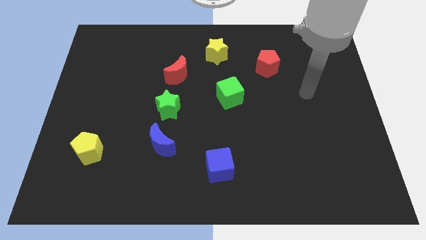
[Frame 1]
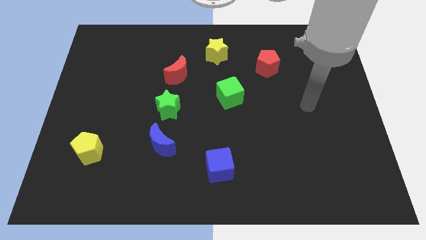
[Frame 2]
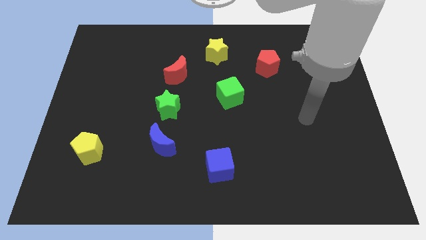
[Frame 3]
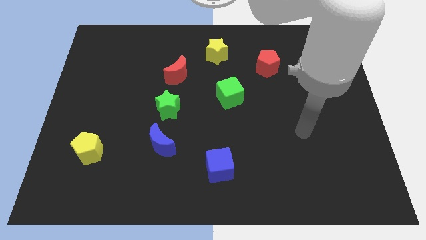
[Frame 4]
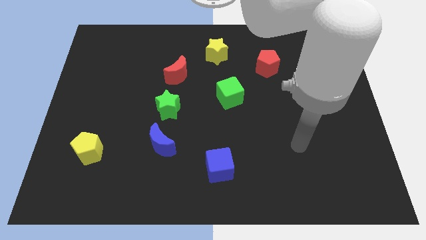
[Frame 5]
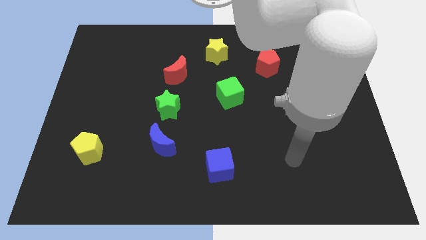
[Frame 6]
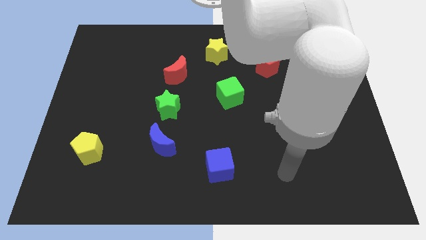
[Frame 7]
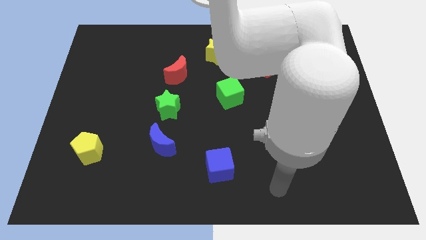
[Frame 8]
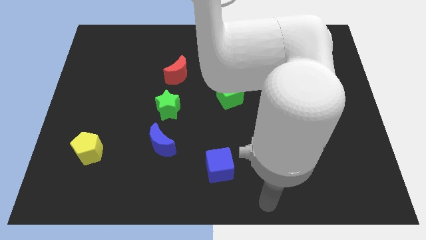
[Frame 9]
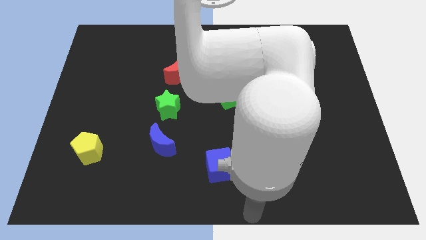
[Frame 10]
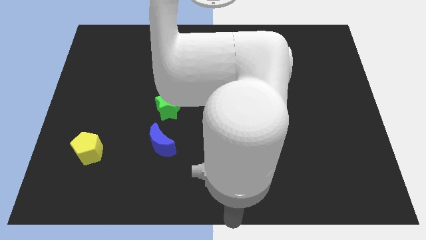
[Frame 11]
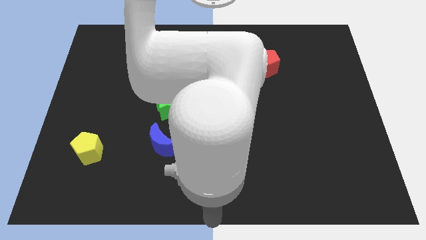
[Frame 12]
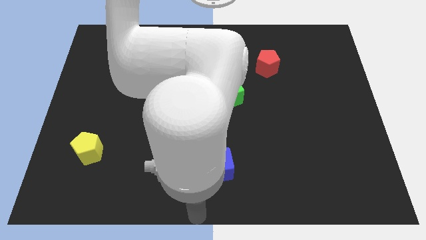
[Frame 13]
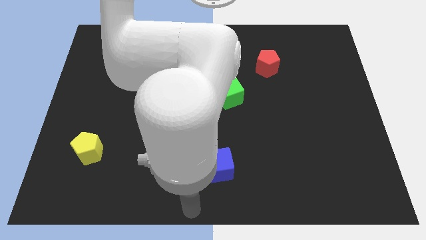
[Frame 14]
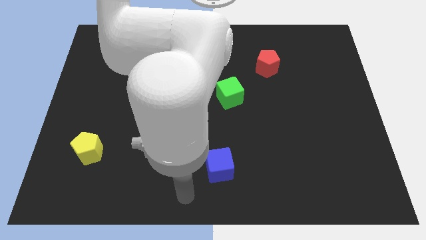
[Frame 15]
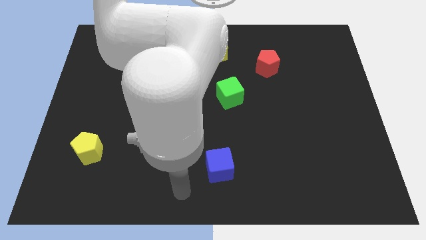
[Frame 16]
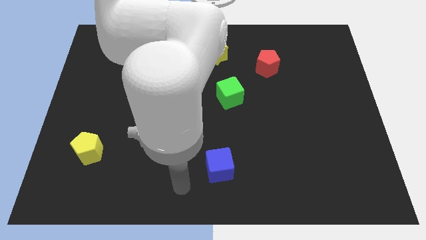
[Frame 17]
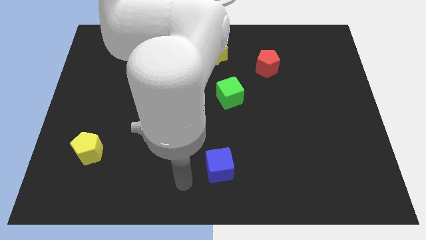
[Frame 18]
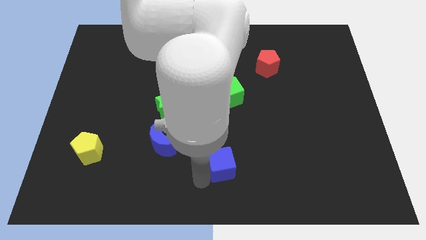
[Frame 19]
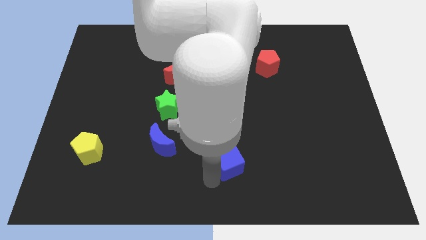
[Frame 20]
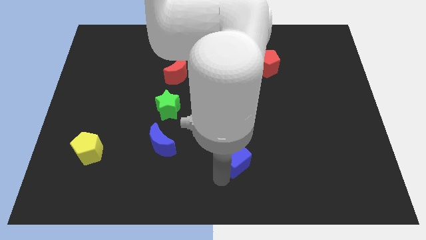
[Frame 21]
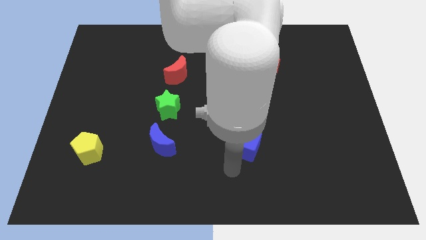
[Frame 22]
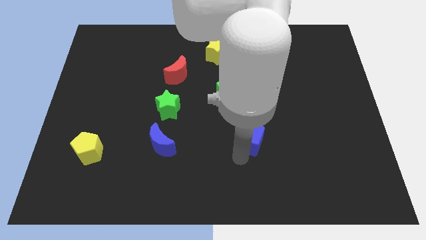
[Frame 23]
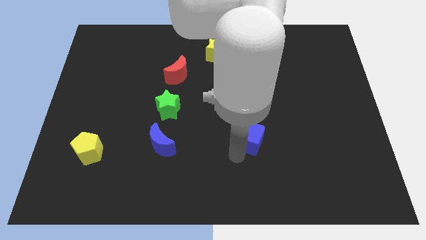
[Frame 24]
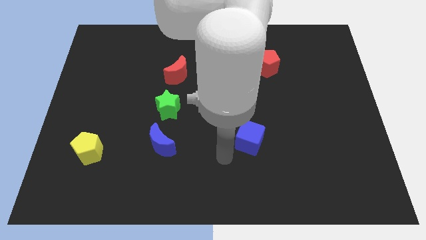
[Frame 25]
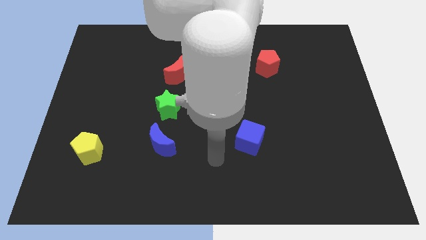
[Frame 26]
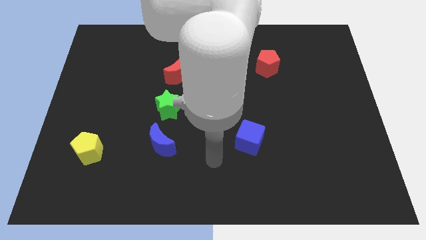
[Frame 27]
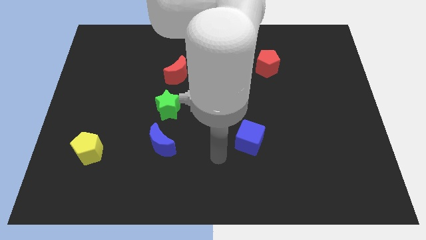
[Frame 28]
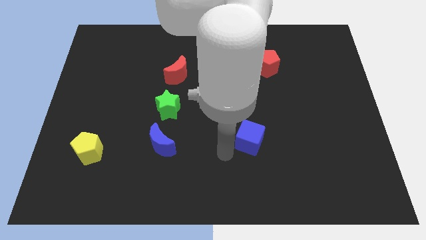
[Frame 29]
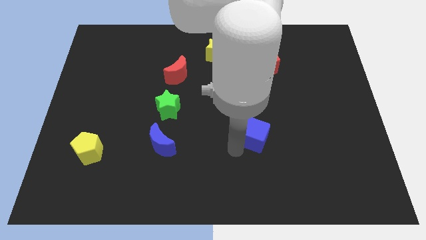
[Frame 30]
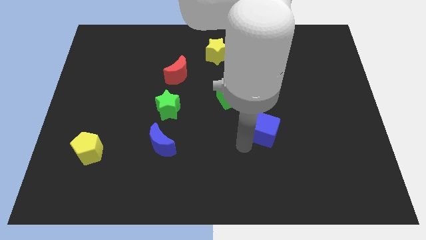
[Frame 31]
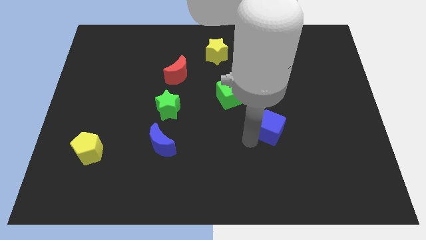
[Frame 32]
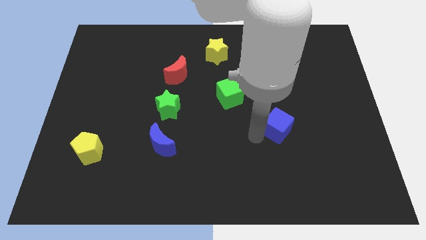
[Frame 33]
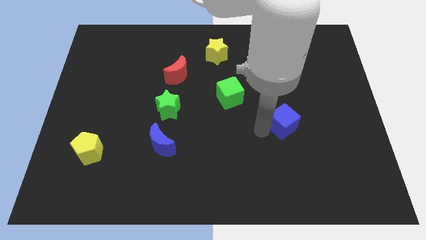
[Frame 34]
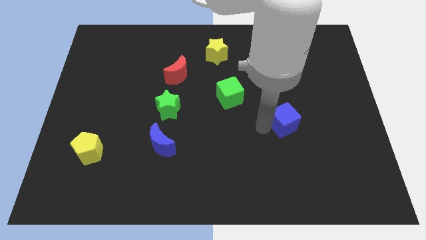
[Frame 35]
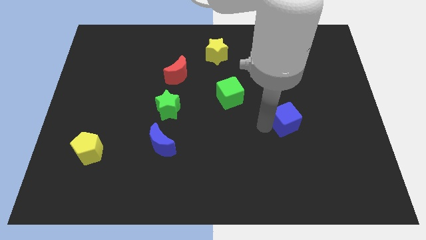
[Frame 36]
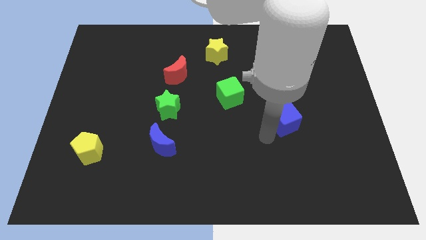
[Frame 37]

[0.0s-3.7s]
drag the blue cube diagonally on the bottom right side of the green cube

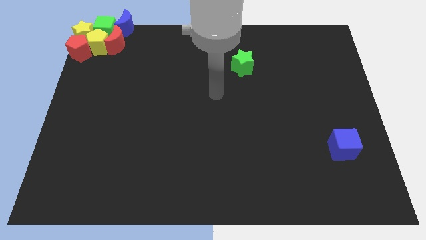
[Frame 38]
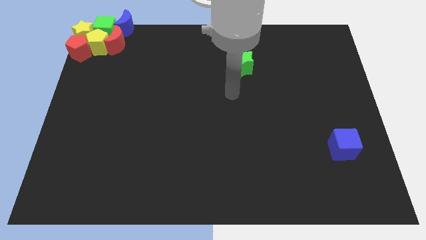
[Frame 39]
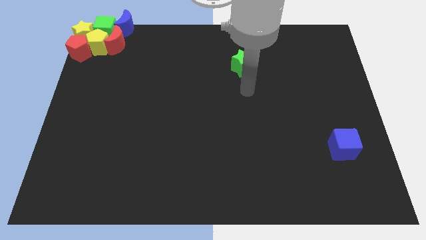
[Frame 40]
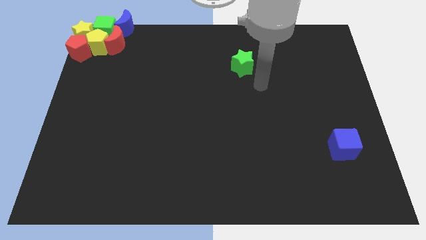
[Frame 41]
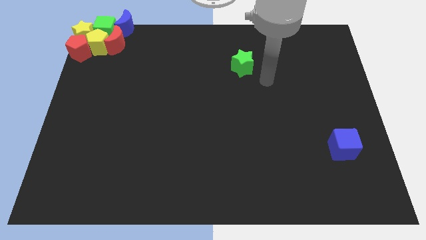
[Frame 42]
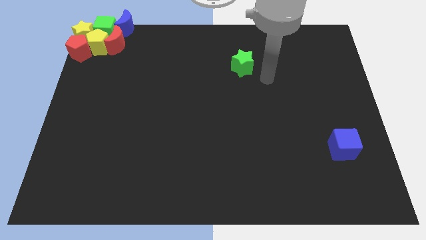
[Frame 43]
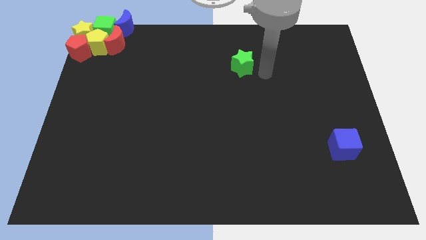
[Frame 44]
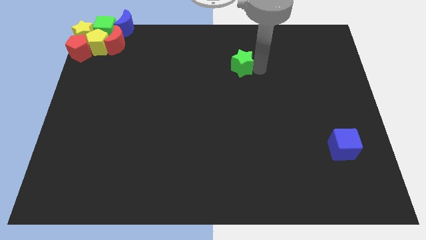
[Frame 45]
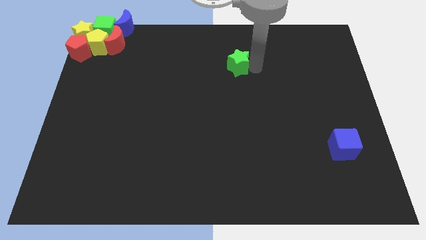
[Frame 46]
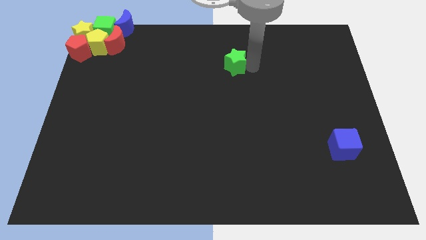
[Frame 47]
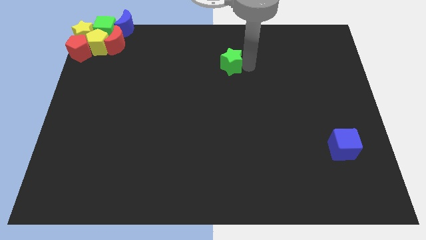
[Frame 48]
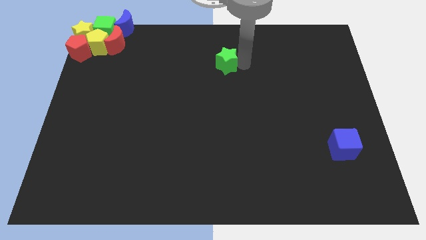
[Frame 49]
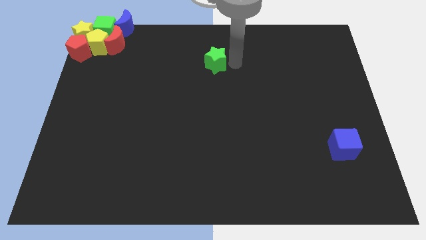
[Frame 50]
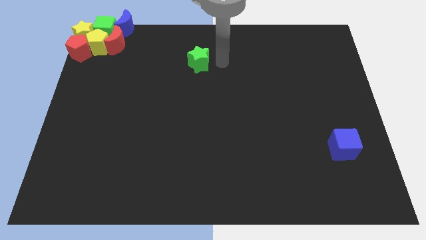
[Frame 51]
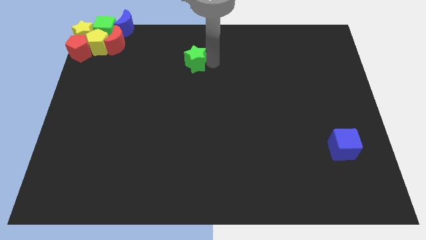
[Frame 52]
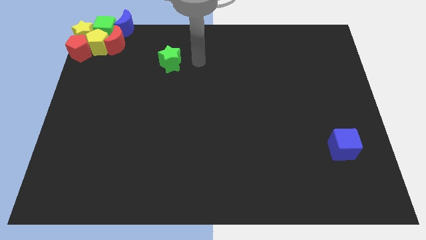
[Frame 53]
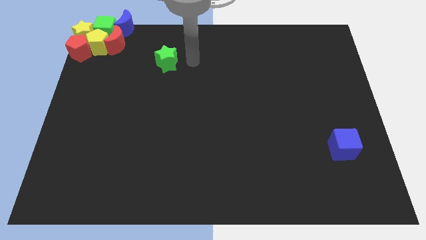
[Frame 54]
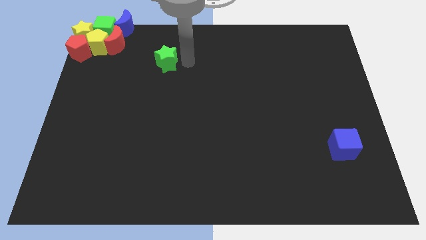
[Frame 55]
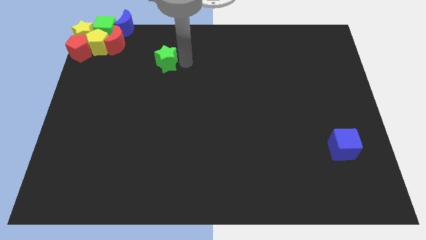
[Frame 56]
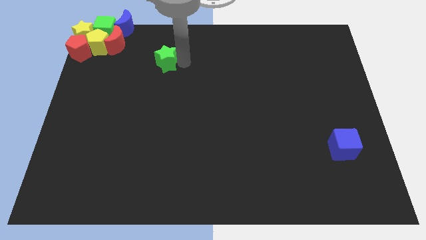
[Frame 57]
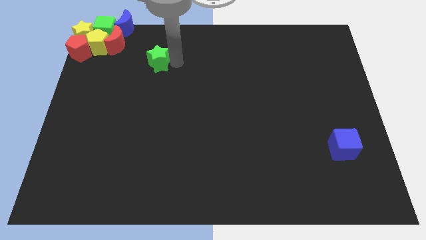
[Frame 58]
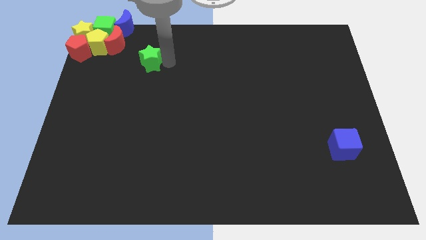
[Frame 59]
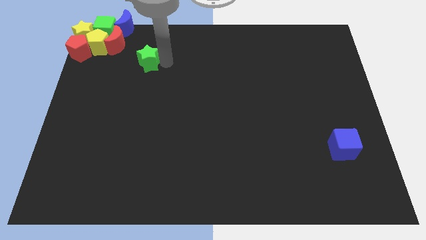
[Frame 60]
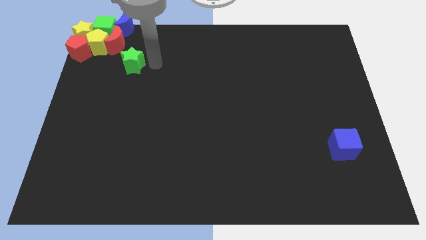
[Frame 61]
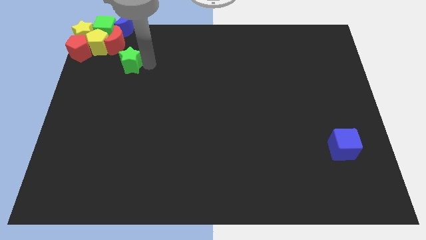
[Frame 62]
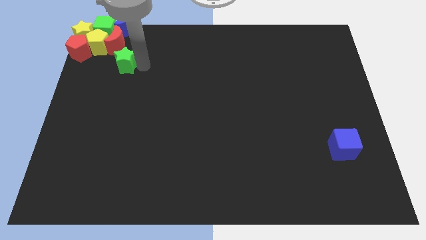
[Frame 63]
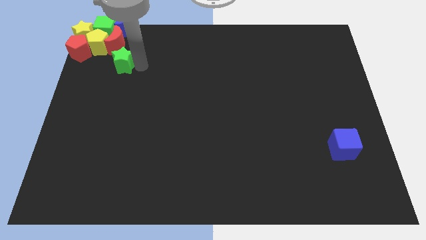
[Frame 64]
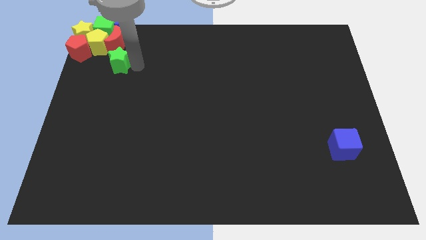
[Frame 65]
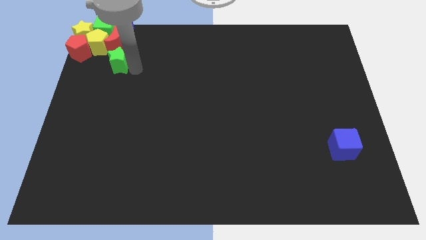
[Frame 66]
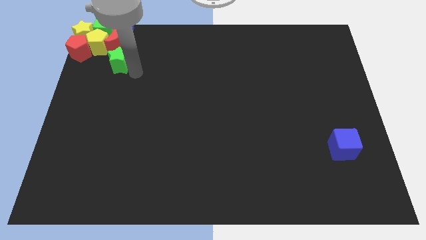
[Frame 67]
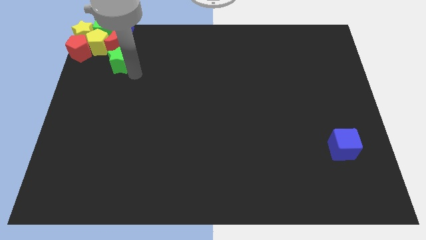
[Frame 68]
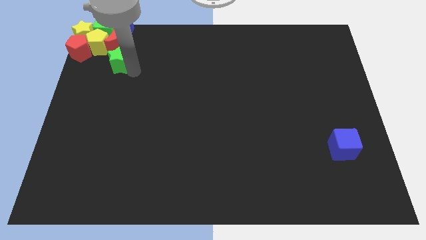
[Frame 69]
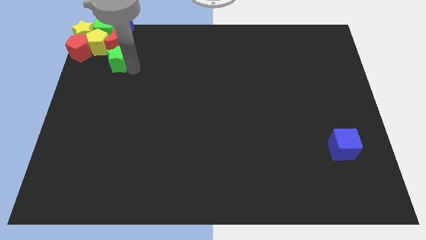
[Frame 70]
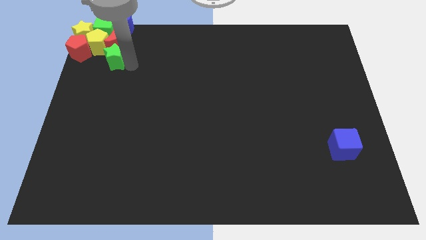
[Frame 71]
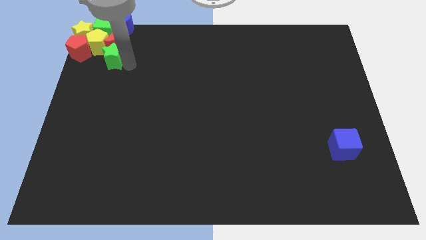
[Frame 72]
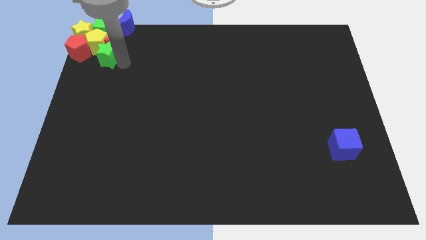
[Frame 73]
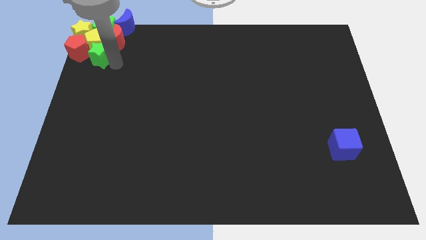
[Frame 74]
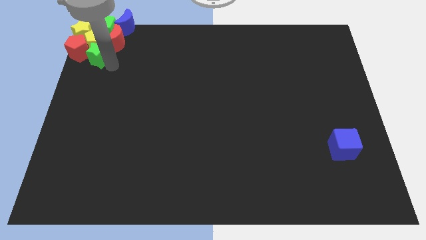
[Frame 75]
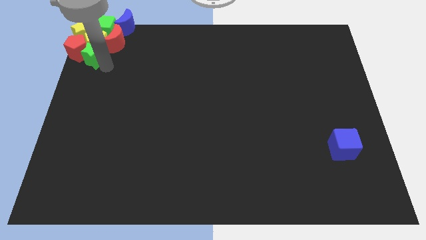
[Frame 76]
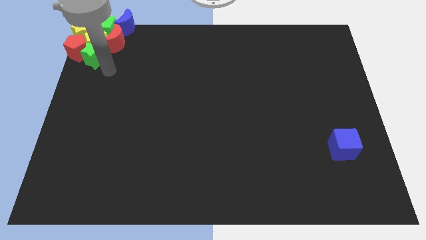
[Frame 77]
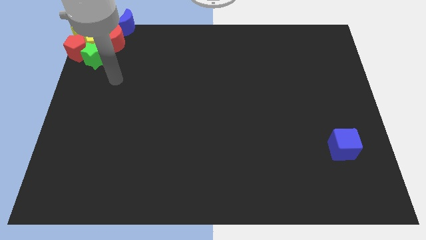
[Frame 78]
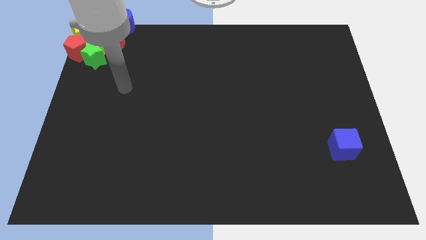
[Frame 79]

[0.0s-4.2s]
move the green star into the blocks

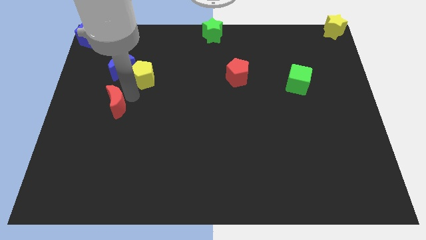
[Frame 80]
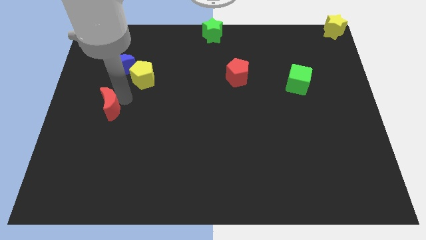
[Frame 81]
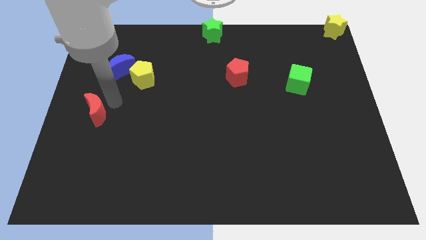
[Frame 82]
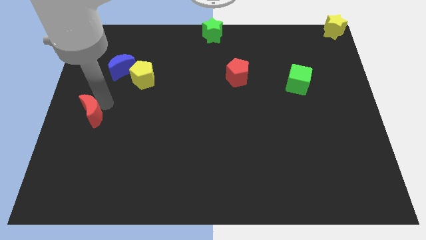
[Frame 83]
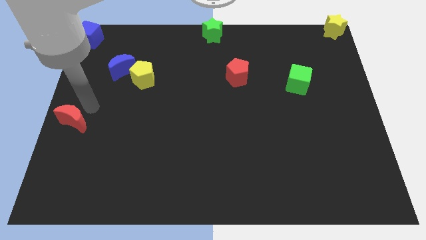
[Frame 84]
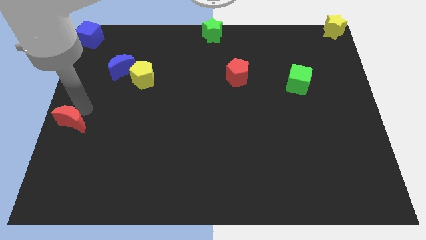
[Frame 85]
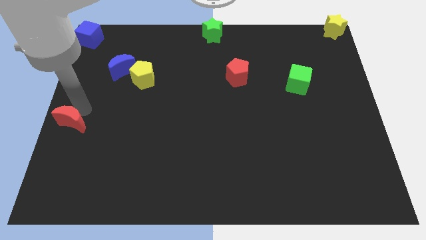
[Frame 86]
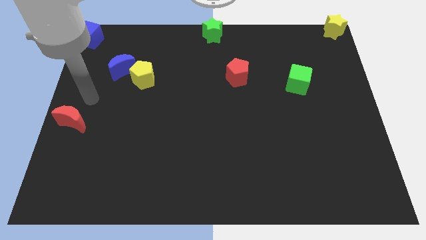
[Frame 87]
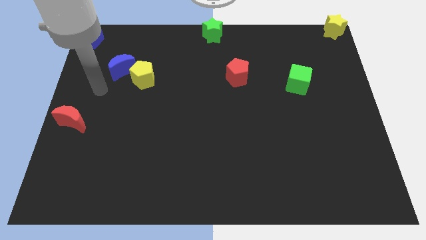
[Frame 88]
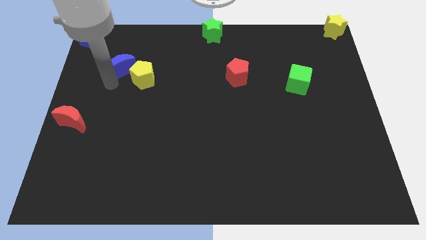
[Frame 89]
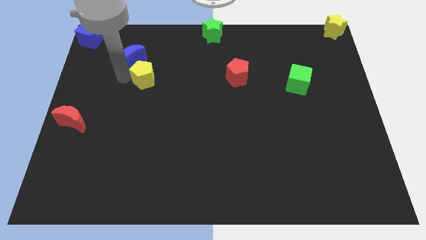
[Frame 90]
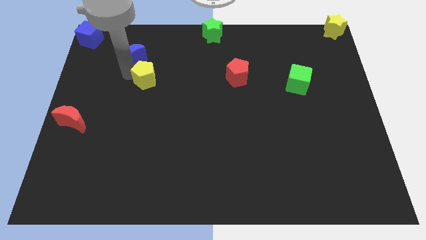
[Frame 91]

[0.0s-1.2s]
drag the red moon into the center left of the board
